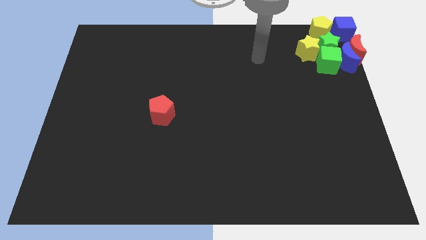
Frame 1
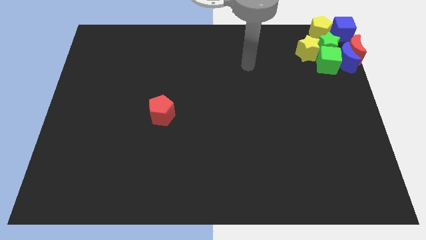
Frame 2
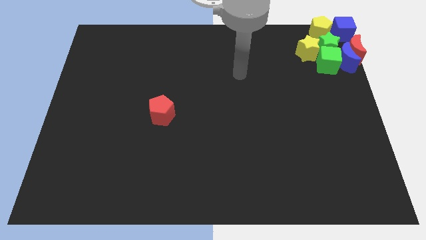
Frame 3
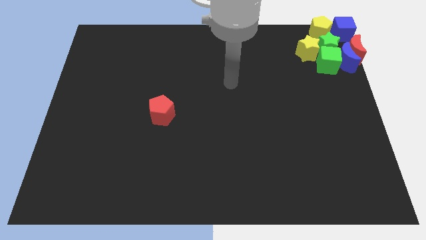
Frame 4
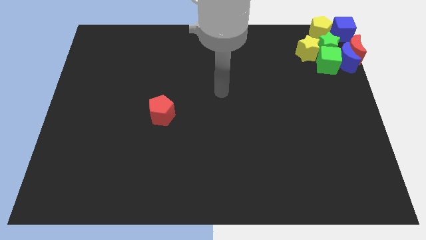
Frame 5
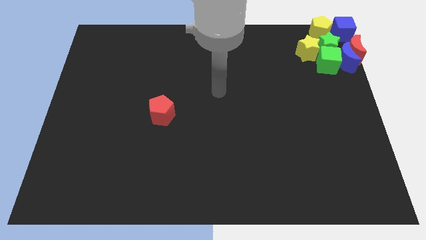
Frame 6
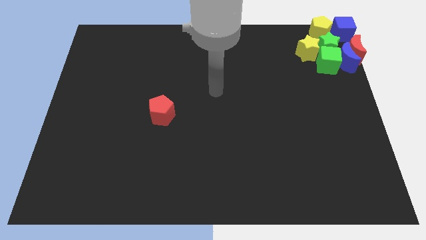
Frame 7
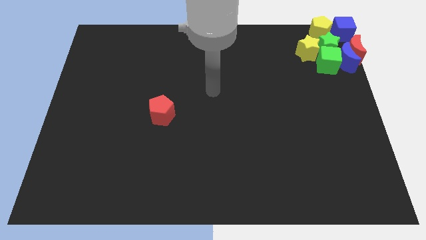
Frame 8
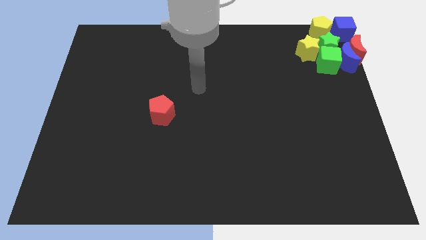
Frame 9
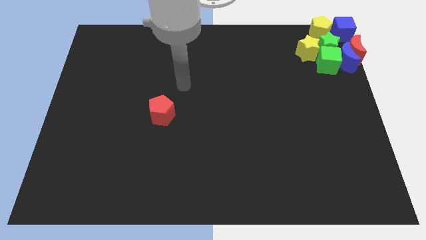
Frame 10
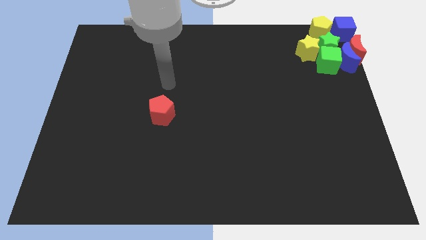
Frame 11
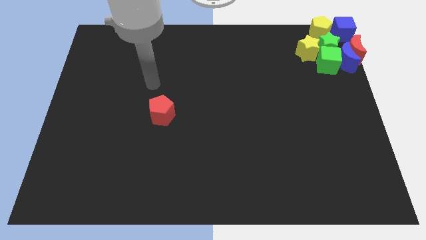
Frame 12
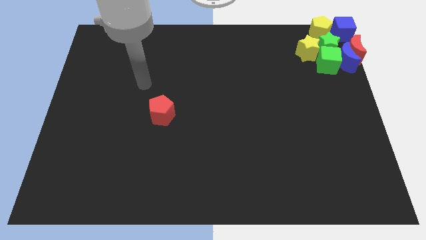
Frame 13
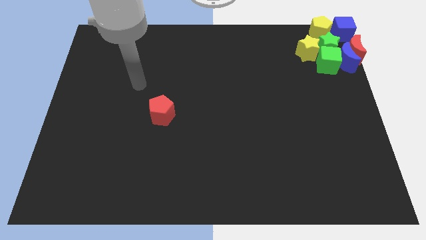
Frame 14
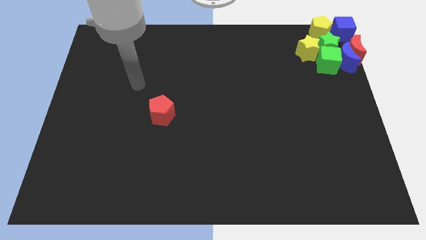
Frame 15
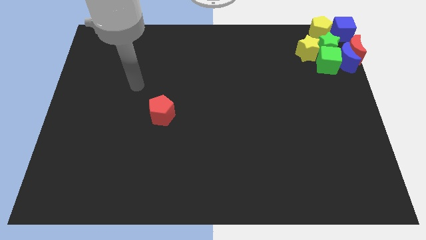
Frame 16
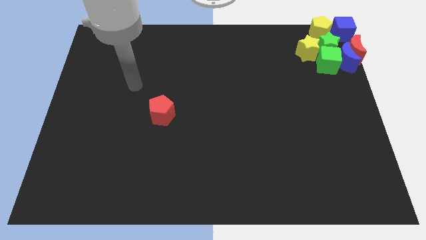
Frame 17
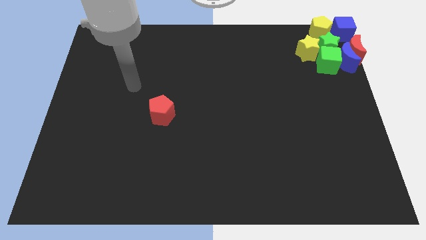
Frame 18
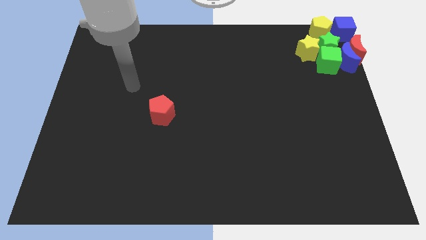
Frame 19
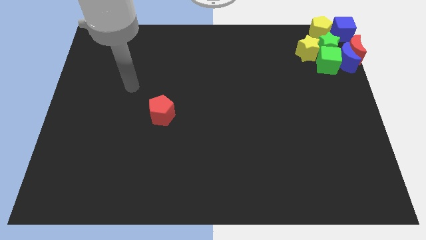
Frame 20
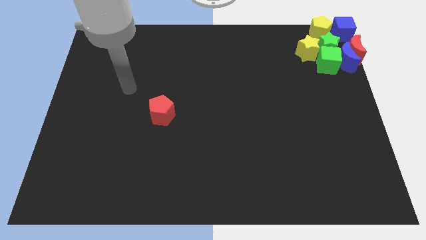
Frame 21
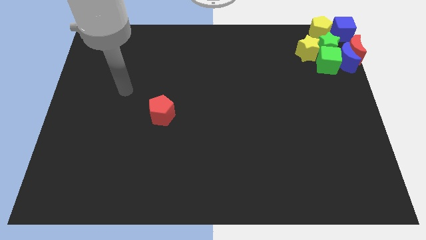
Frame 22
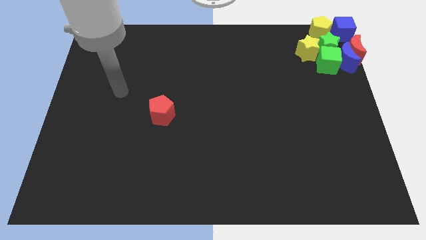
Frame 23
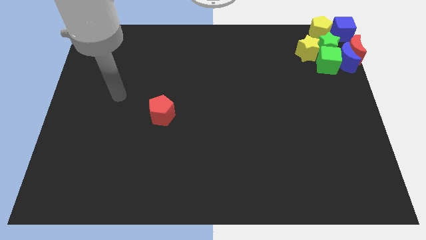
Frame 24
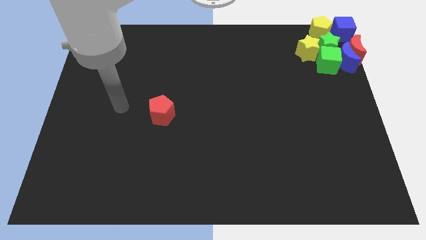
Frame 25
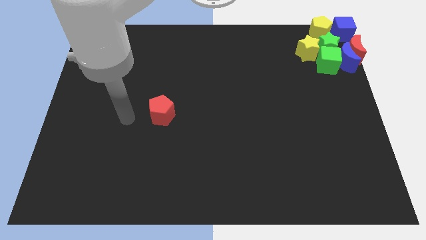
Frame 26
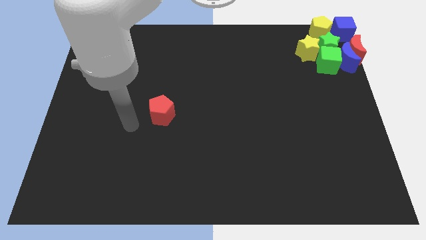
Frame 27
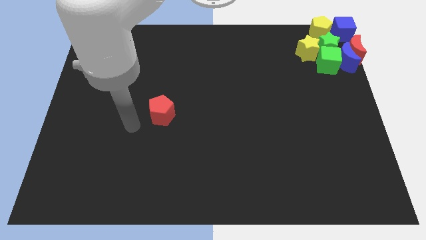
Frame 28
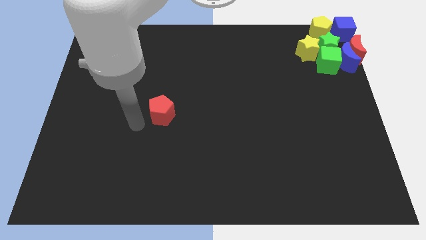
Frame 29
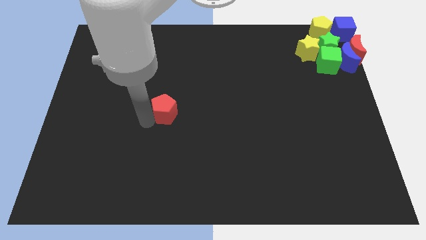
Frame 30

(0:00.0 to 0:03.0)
move your arm to the left of the red pentagon

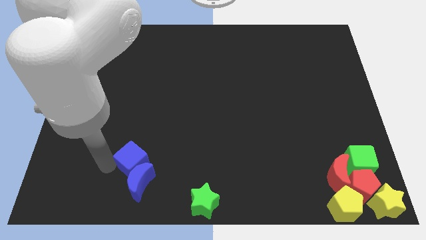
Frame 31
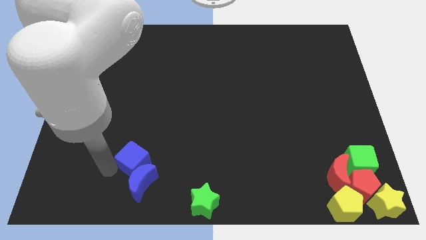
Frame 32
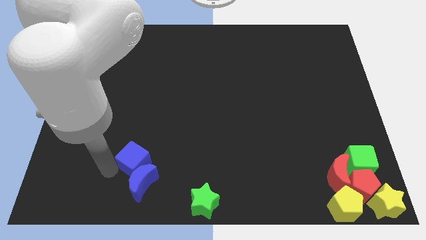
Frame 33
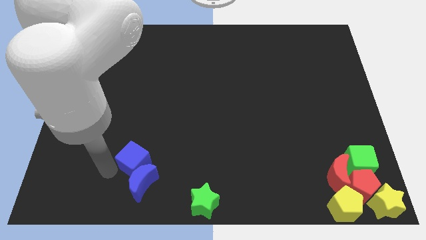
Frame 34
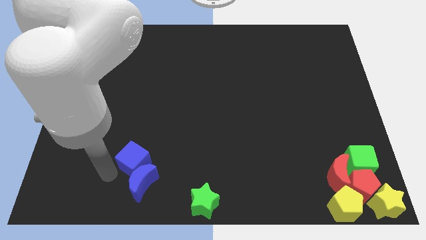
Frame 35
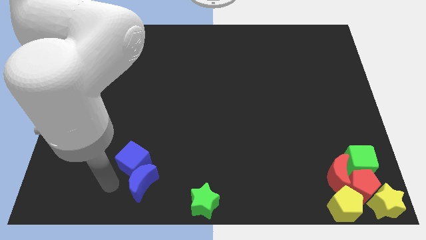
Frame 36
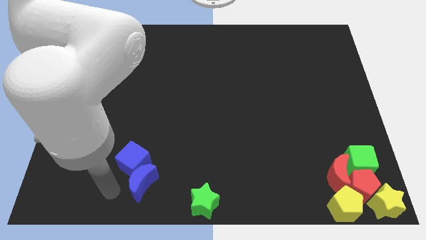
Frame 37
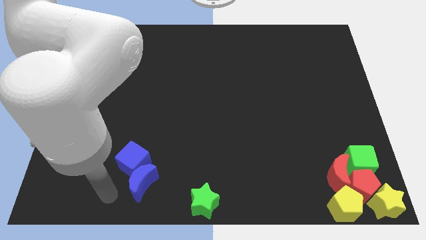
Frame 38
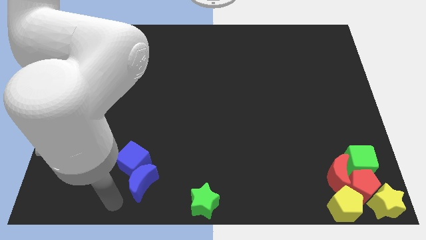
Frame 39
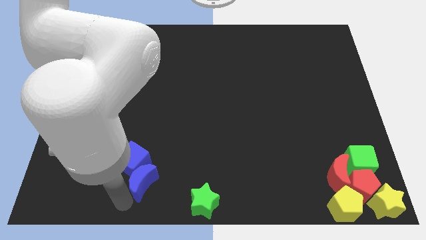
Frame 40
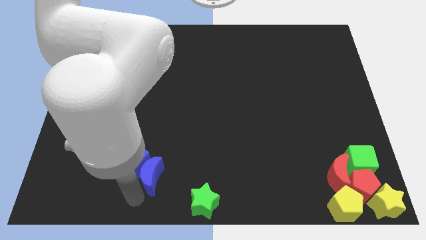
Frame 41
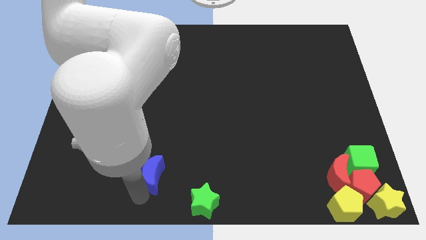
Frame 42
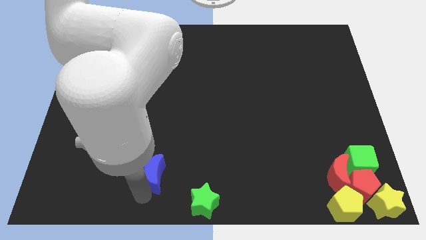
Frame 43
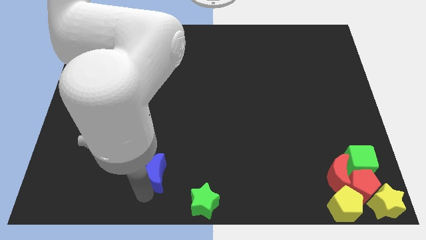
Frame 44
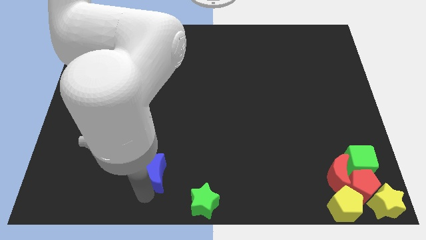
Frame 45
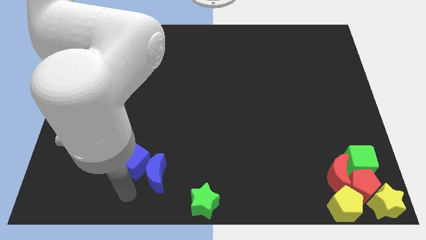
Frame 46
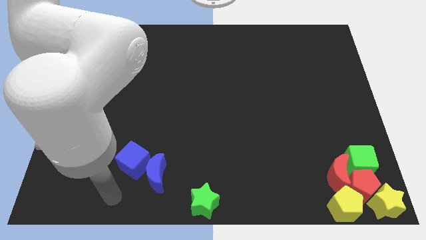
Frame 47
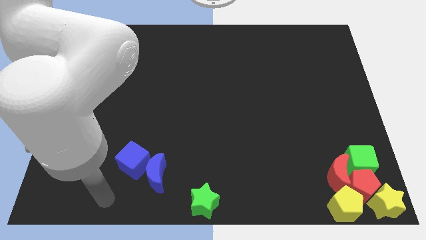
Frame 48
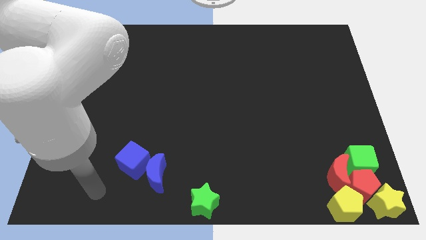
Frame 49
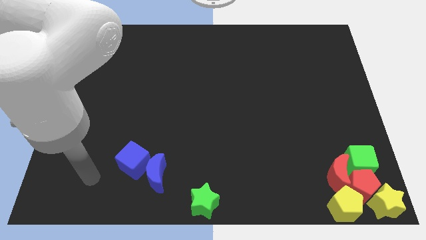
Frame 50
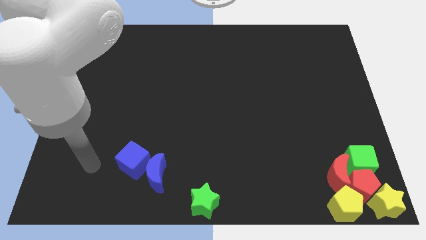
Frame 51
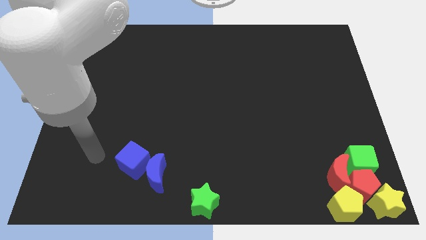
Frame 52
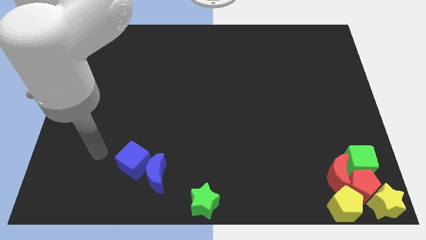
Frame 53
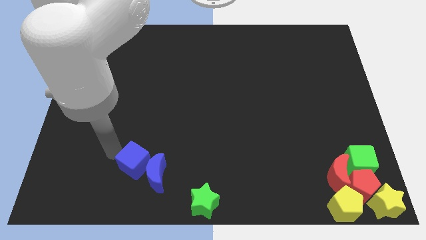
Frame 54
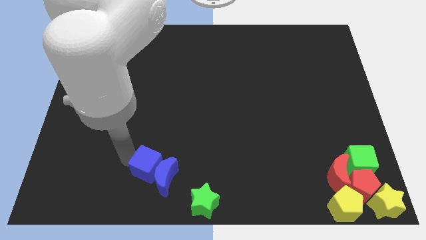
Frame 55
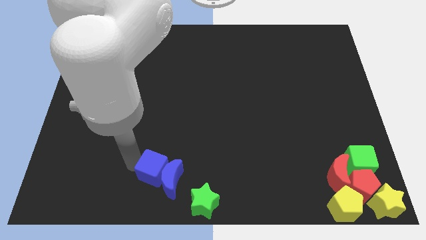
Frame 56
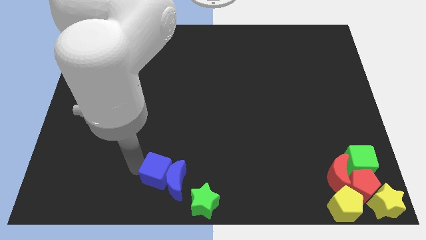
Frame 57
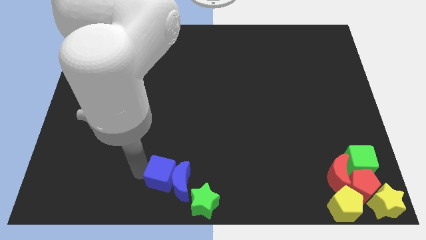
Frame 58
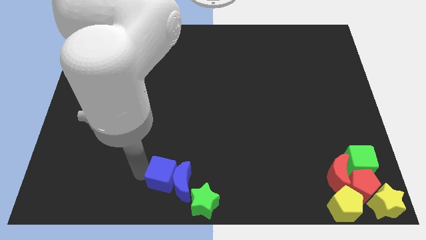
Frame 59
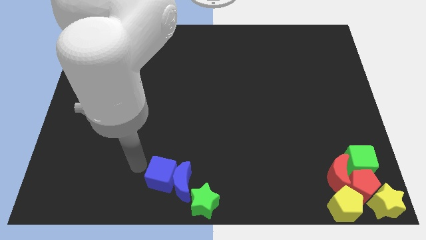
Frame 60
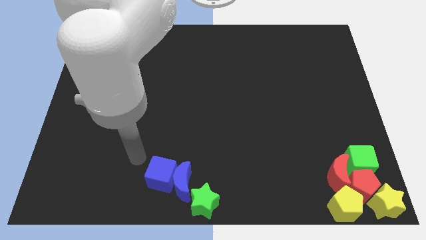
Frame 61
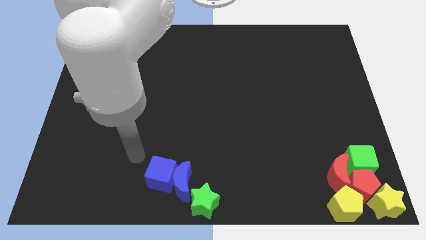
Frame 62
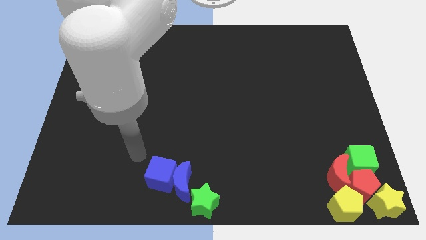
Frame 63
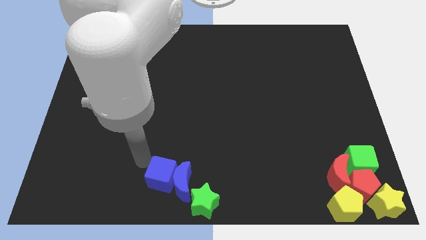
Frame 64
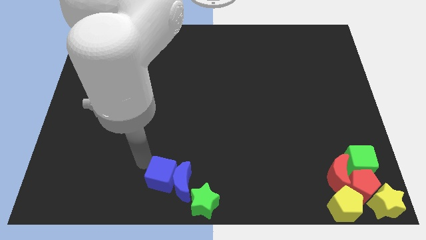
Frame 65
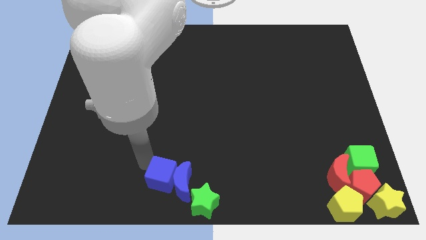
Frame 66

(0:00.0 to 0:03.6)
put both the blue blocks at the top left side of the green star

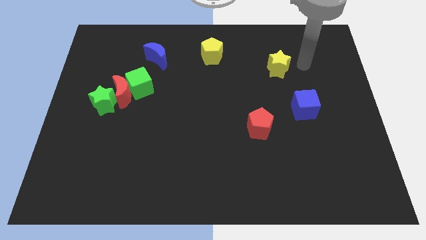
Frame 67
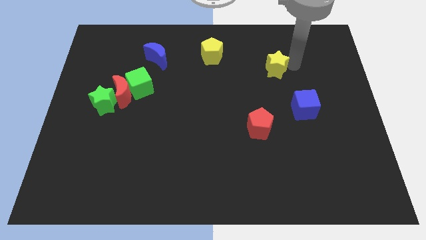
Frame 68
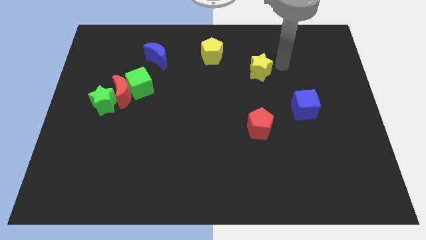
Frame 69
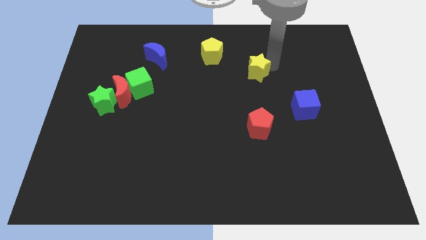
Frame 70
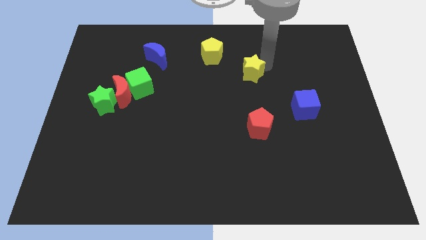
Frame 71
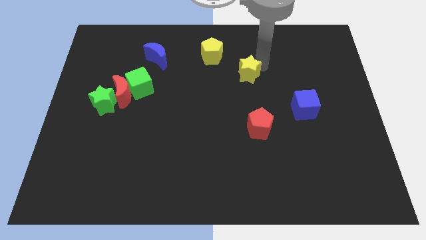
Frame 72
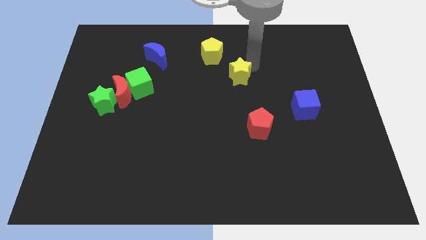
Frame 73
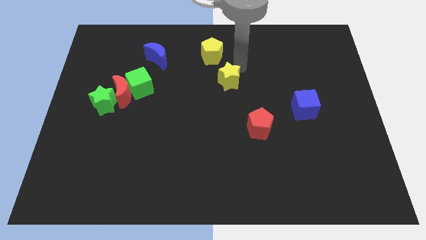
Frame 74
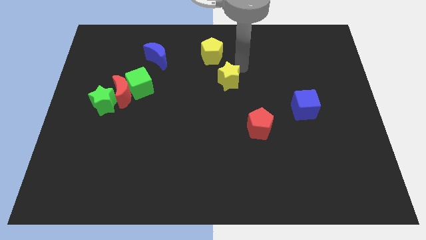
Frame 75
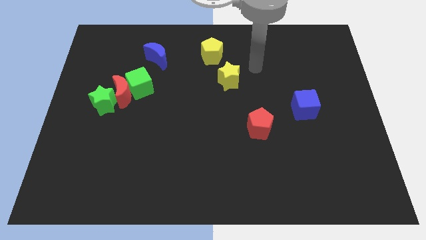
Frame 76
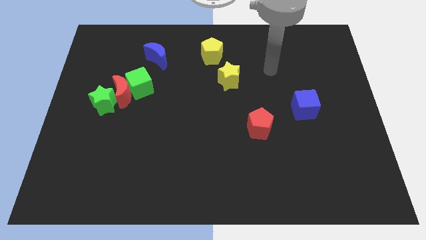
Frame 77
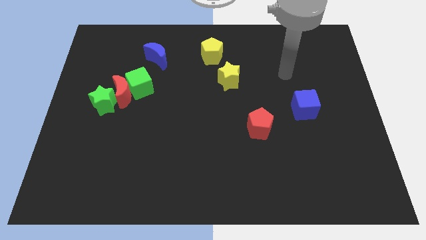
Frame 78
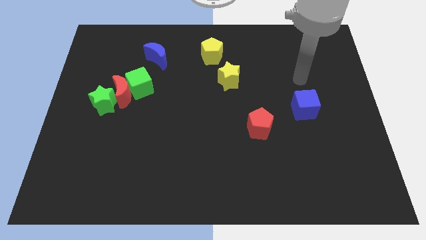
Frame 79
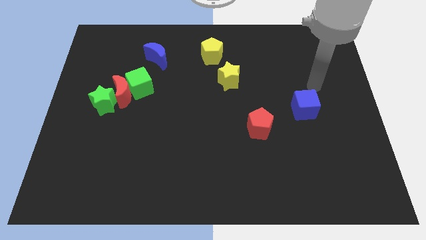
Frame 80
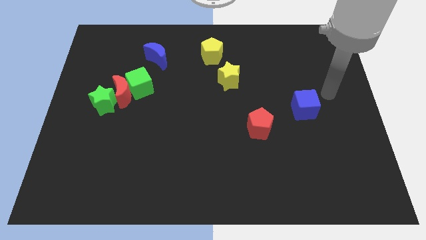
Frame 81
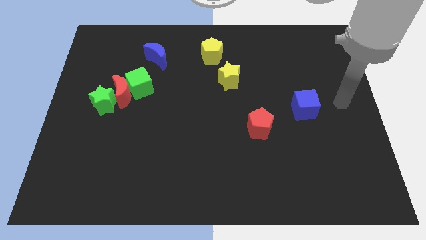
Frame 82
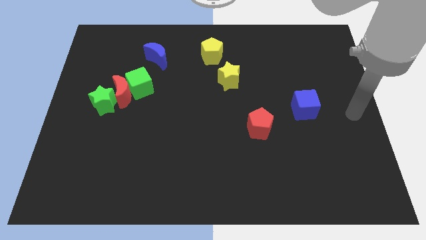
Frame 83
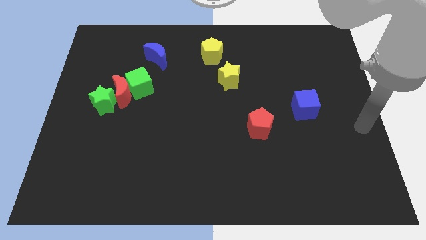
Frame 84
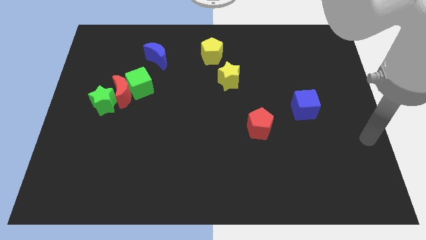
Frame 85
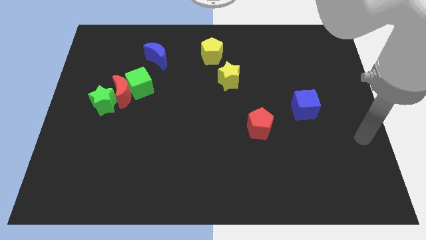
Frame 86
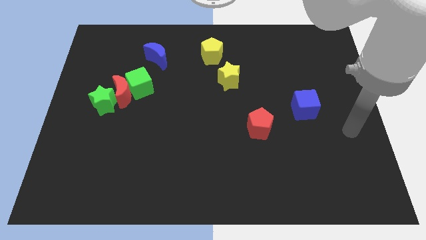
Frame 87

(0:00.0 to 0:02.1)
place the yellow star close to the right of the yellow pentagon

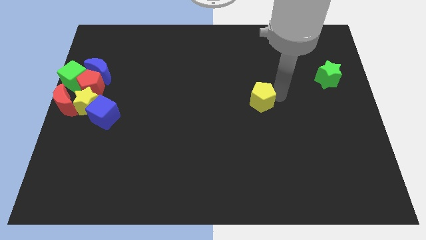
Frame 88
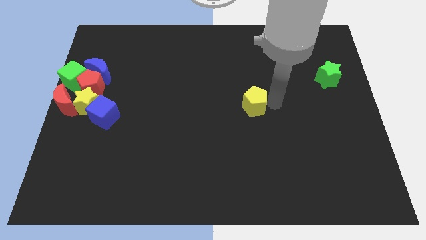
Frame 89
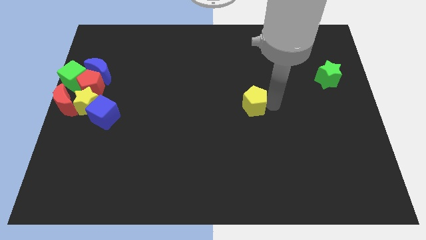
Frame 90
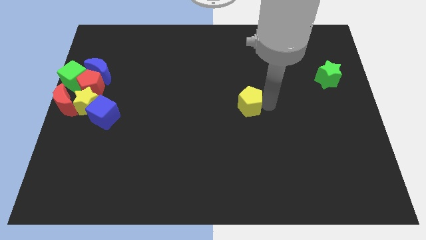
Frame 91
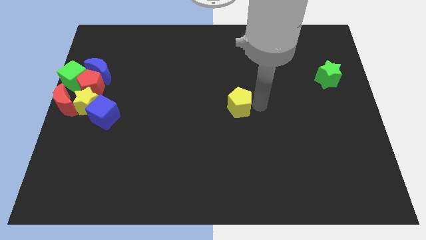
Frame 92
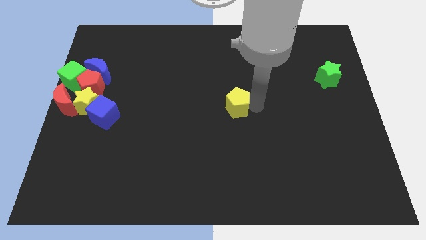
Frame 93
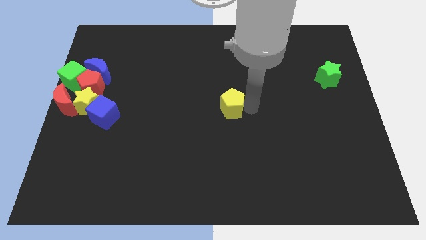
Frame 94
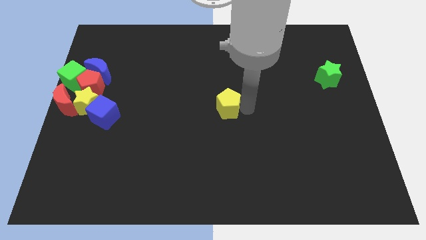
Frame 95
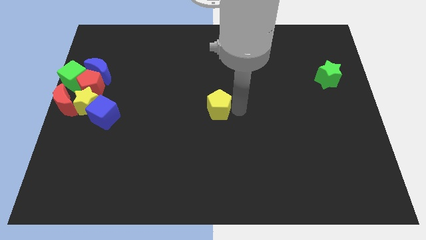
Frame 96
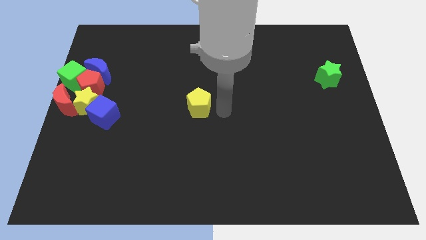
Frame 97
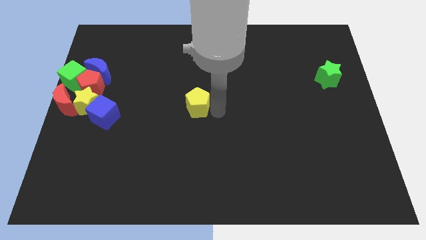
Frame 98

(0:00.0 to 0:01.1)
push the yellow pentagon parallel right to the blue cube
